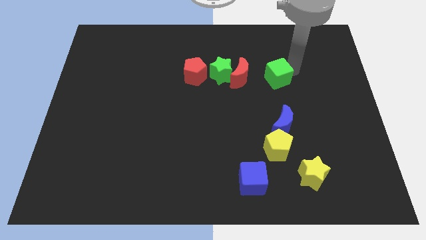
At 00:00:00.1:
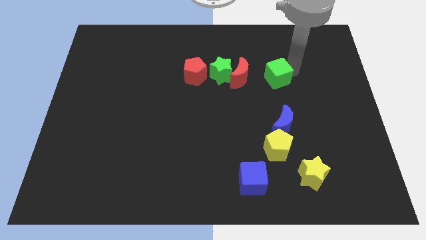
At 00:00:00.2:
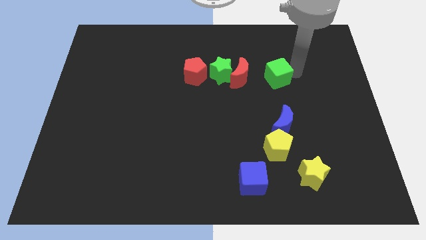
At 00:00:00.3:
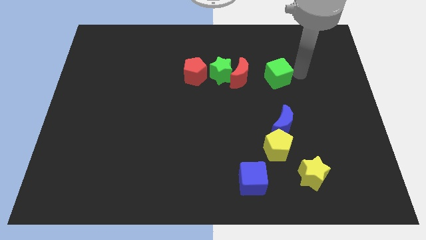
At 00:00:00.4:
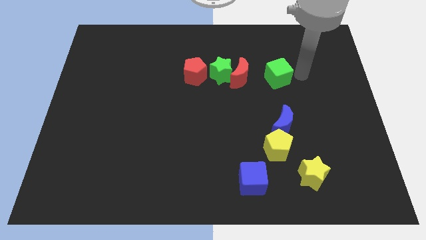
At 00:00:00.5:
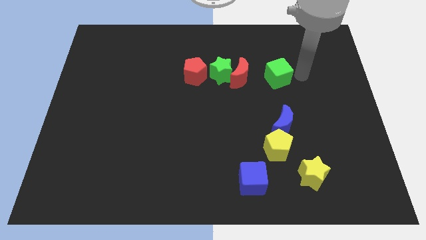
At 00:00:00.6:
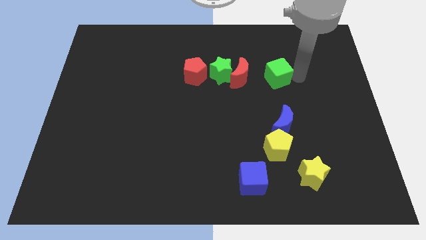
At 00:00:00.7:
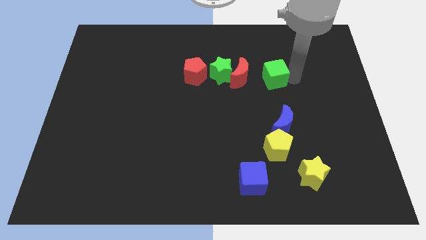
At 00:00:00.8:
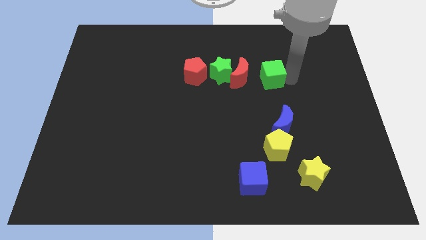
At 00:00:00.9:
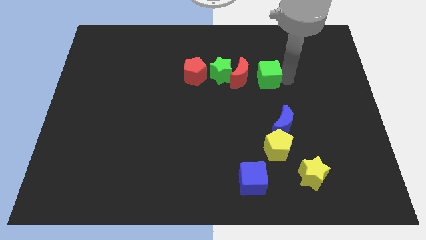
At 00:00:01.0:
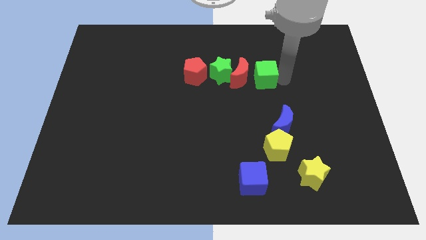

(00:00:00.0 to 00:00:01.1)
push the green cube to the right side of the red crescent

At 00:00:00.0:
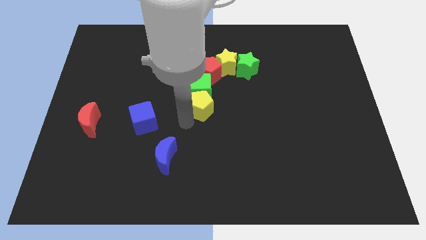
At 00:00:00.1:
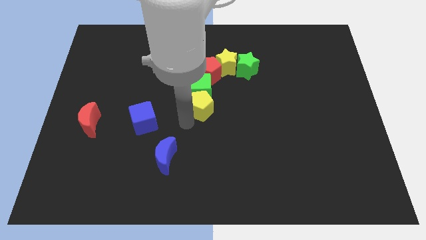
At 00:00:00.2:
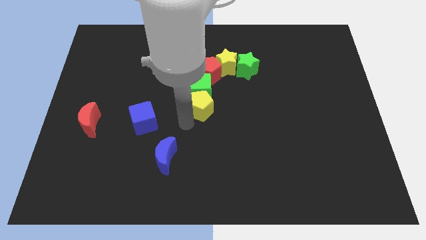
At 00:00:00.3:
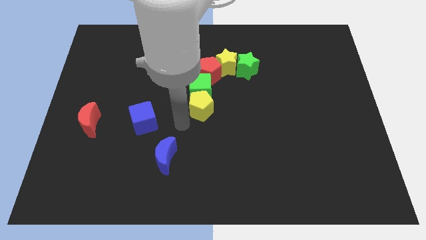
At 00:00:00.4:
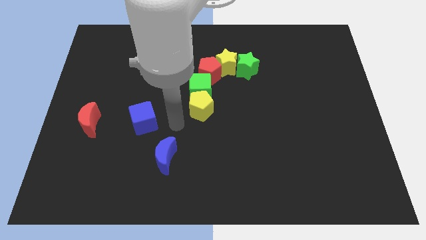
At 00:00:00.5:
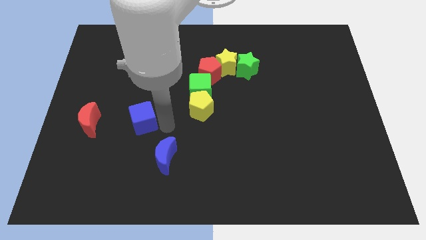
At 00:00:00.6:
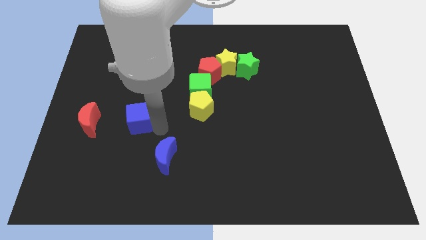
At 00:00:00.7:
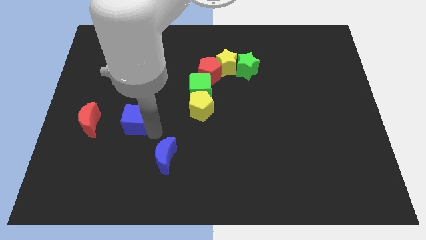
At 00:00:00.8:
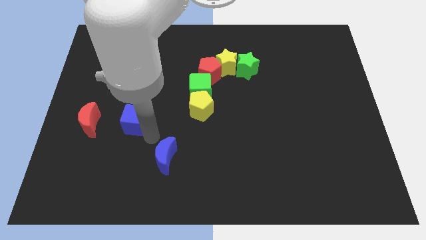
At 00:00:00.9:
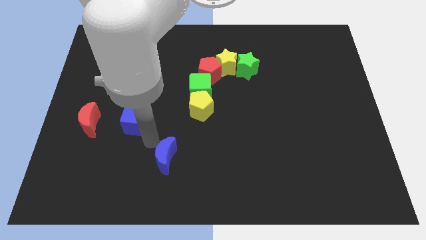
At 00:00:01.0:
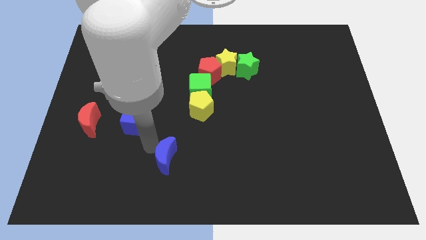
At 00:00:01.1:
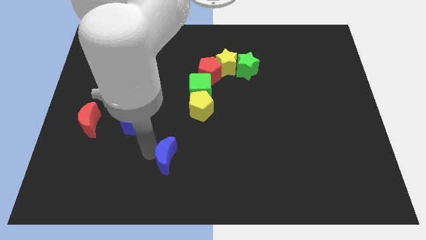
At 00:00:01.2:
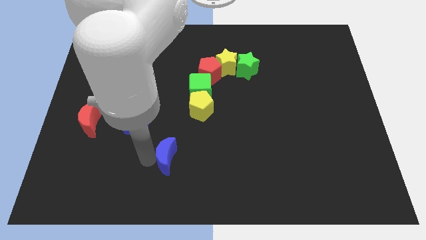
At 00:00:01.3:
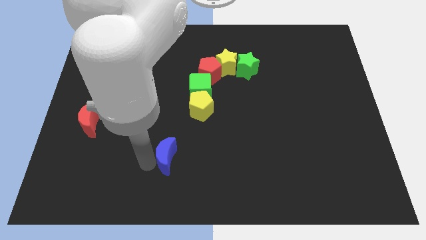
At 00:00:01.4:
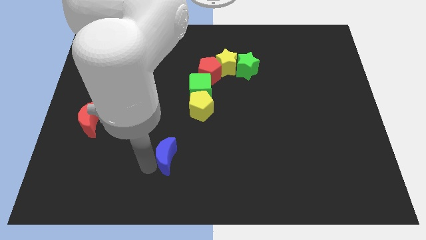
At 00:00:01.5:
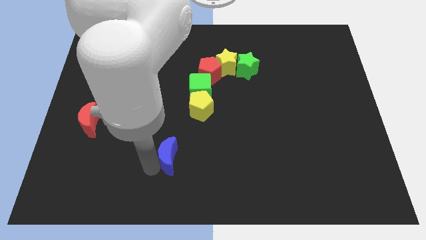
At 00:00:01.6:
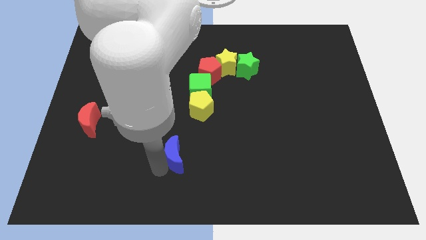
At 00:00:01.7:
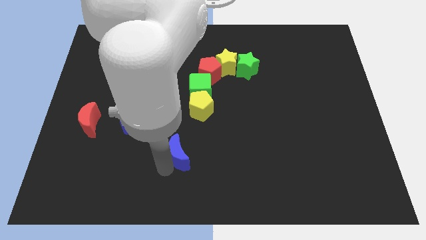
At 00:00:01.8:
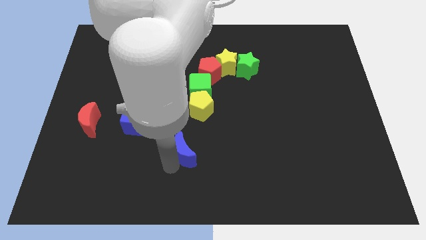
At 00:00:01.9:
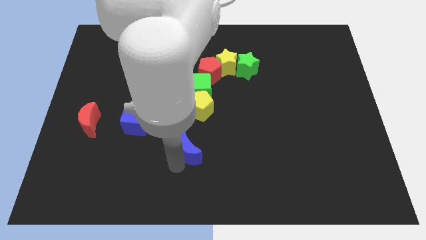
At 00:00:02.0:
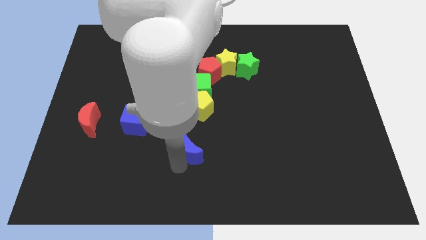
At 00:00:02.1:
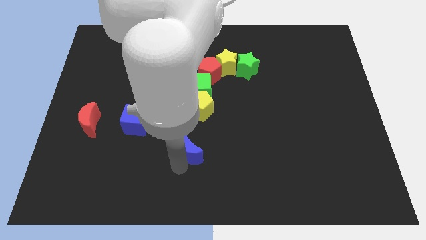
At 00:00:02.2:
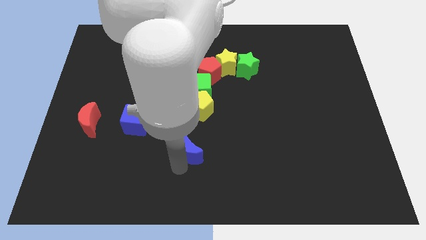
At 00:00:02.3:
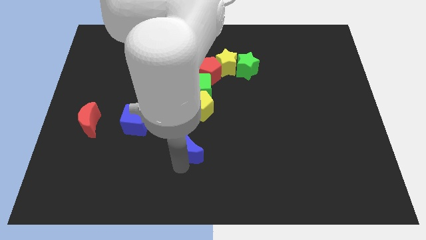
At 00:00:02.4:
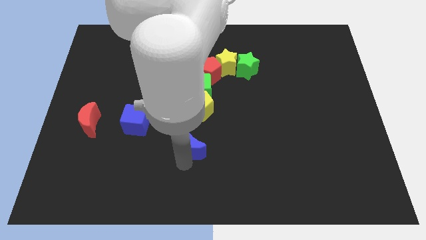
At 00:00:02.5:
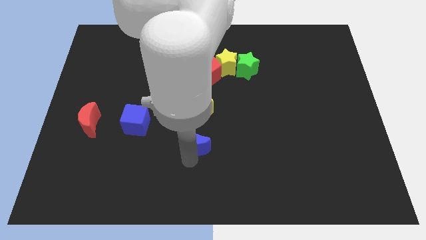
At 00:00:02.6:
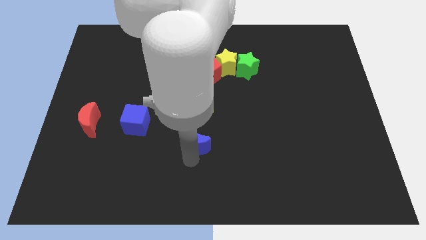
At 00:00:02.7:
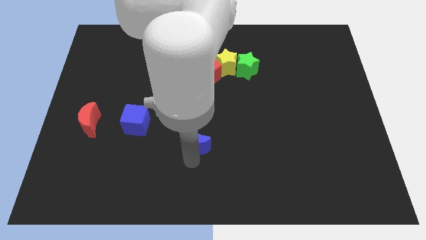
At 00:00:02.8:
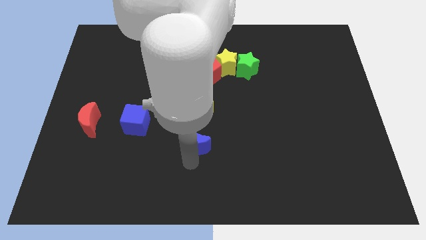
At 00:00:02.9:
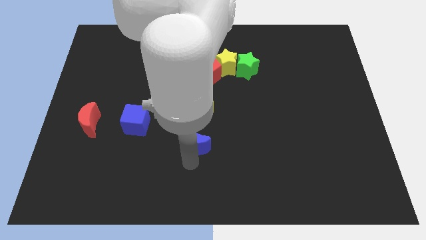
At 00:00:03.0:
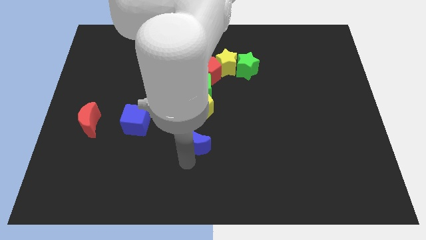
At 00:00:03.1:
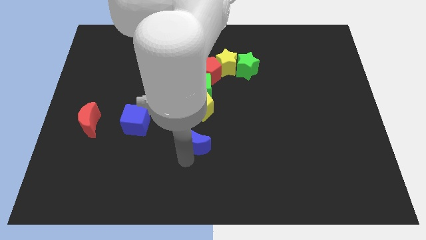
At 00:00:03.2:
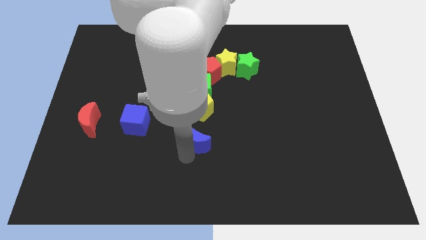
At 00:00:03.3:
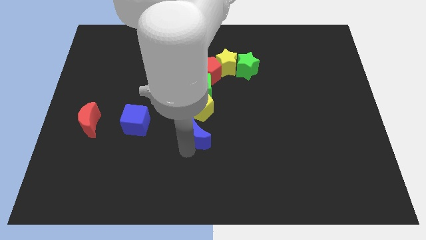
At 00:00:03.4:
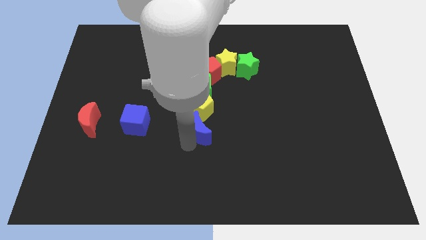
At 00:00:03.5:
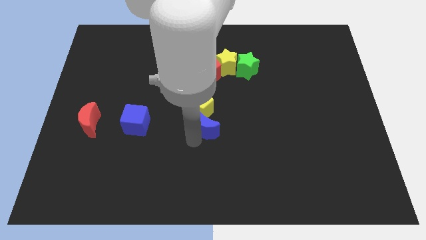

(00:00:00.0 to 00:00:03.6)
place the blue moon towards the yellow pentagon

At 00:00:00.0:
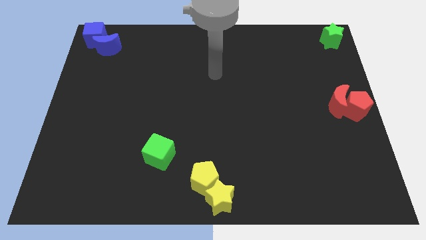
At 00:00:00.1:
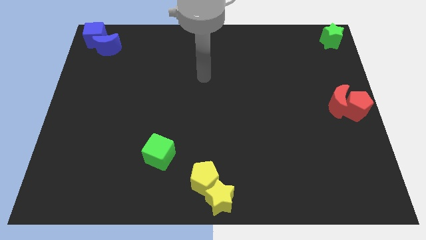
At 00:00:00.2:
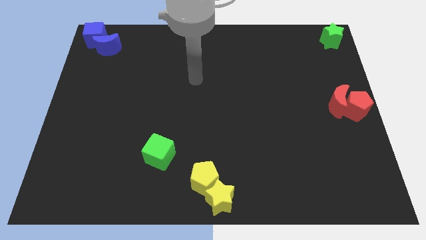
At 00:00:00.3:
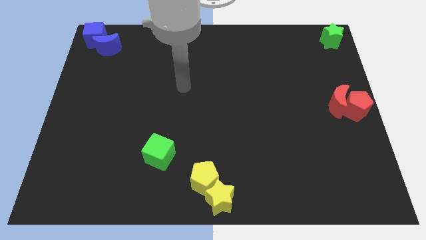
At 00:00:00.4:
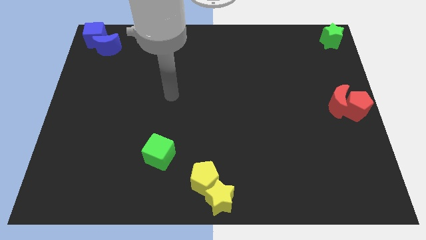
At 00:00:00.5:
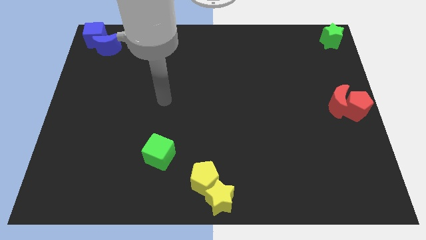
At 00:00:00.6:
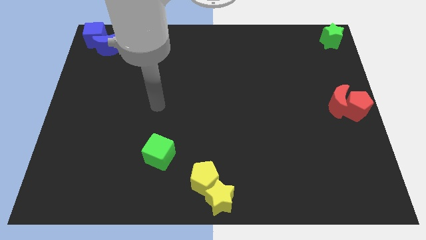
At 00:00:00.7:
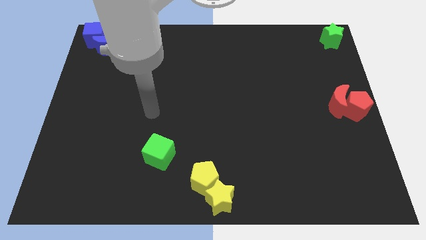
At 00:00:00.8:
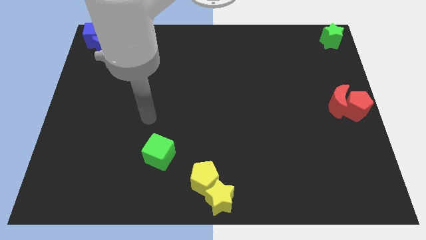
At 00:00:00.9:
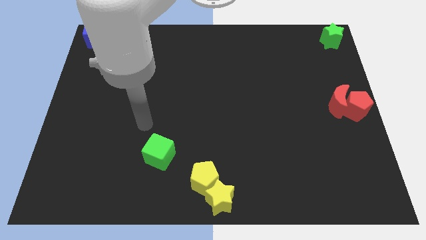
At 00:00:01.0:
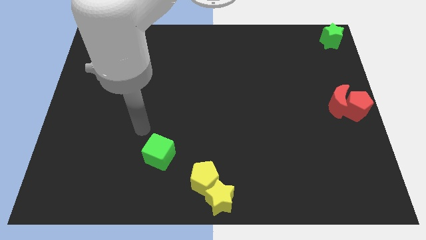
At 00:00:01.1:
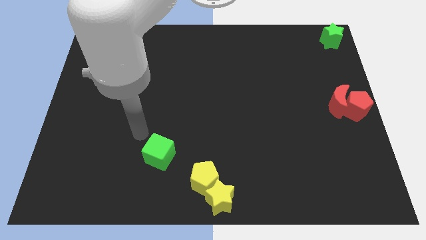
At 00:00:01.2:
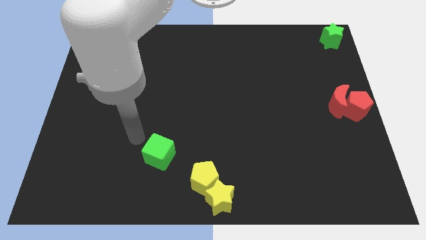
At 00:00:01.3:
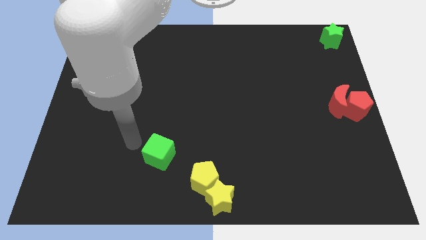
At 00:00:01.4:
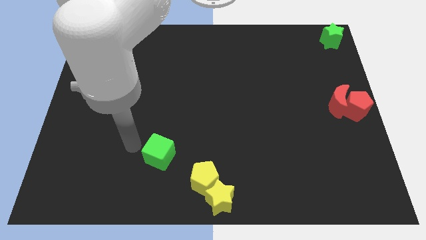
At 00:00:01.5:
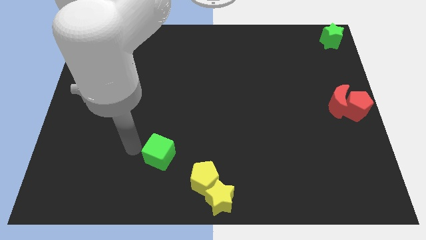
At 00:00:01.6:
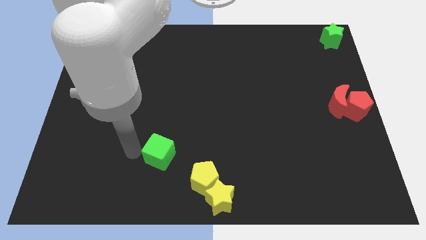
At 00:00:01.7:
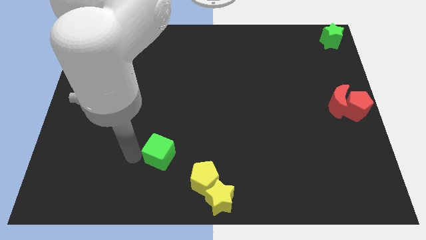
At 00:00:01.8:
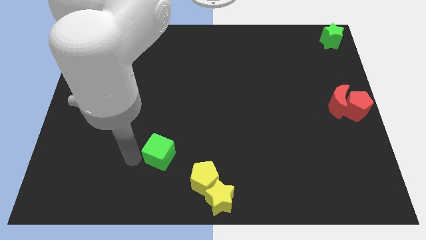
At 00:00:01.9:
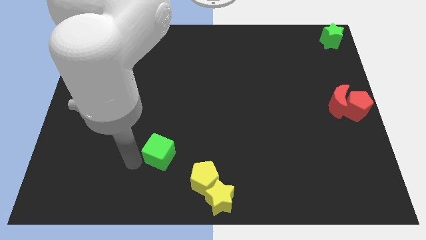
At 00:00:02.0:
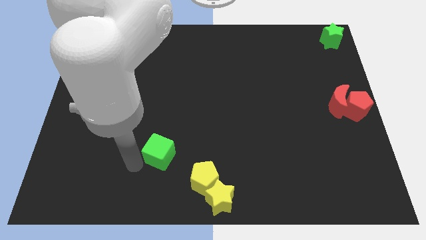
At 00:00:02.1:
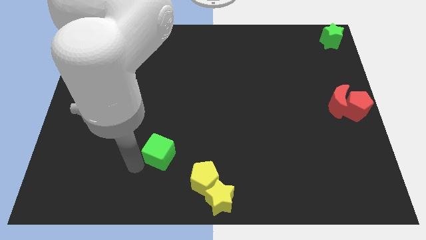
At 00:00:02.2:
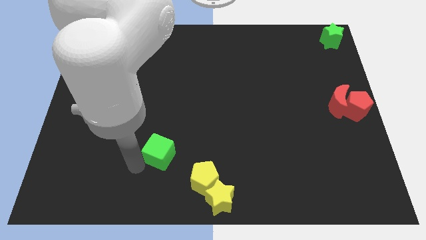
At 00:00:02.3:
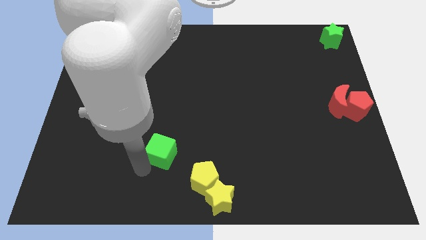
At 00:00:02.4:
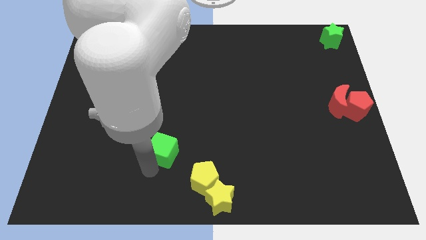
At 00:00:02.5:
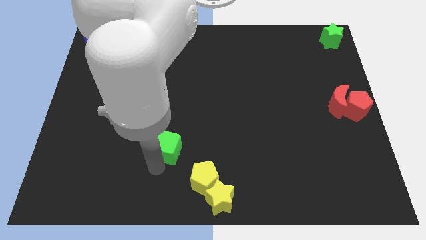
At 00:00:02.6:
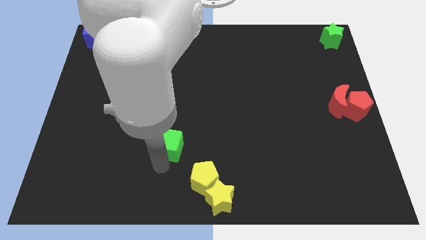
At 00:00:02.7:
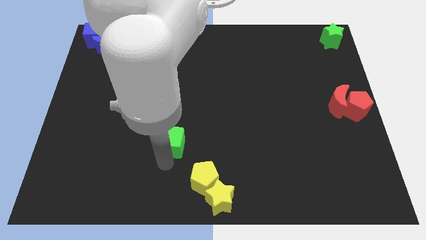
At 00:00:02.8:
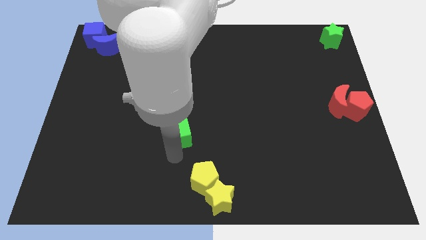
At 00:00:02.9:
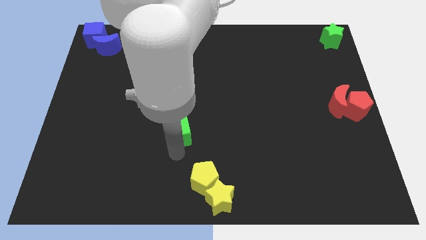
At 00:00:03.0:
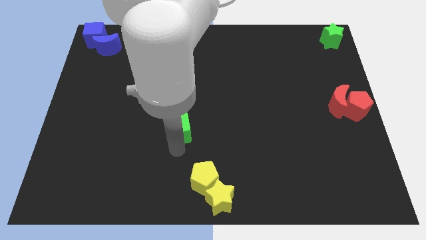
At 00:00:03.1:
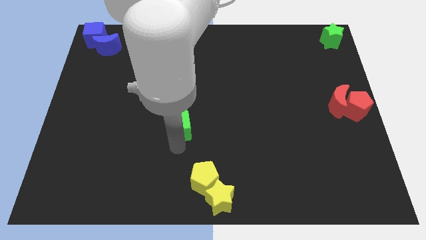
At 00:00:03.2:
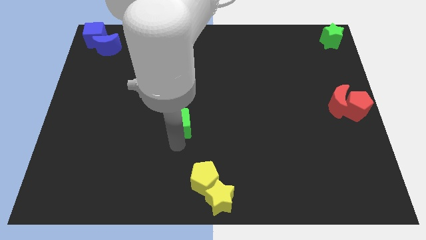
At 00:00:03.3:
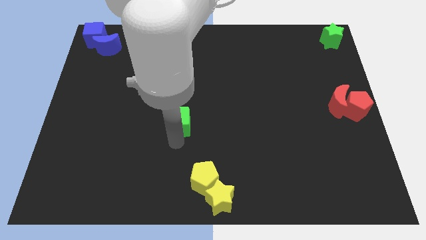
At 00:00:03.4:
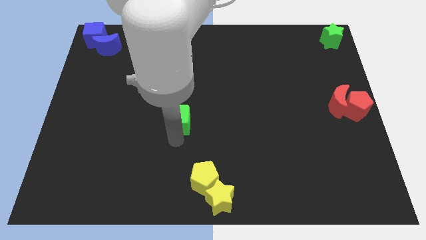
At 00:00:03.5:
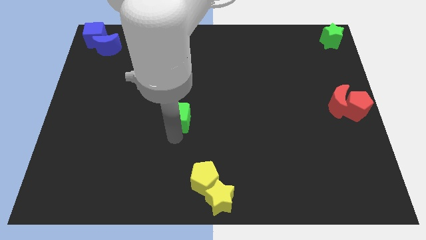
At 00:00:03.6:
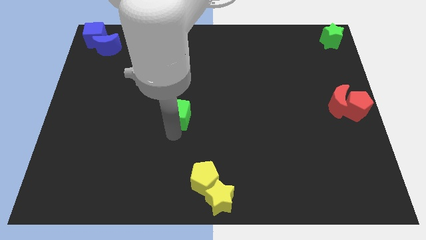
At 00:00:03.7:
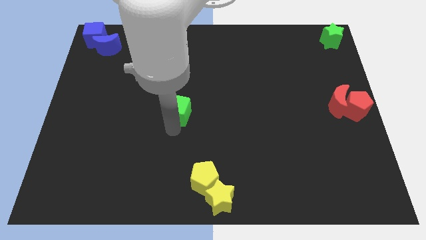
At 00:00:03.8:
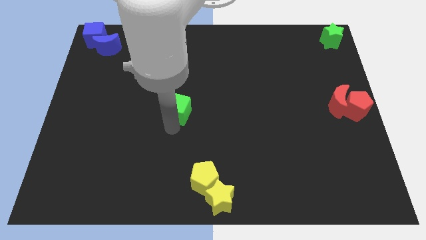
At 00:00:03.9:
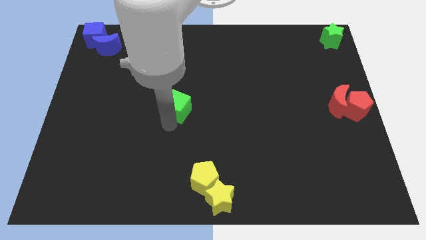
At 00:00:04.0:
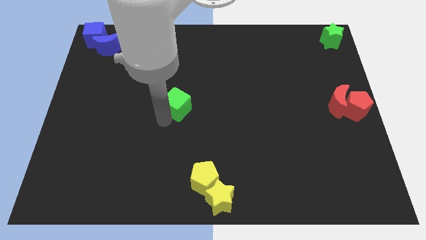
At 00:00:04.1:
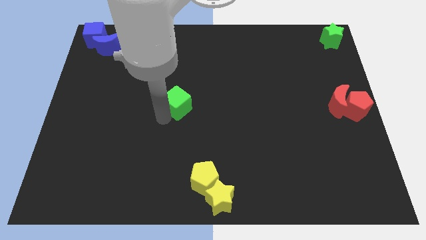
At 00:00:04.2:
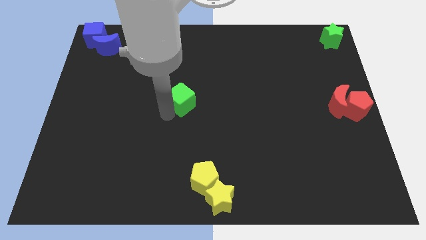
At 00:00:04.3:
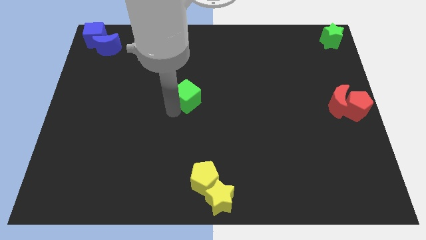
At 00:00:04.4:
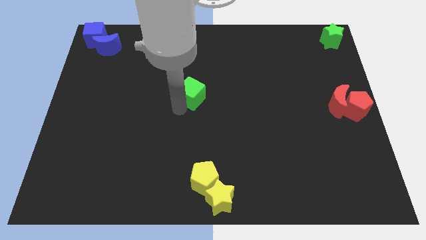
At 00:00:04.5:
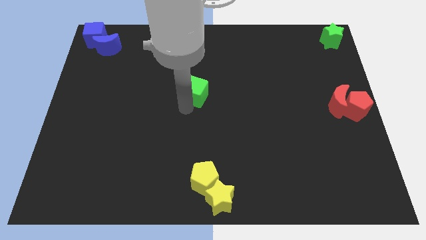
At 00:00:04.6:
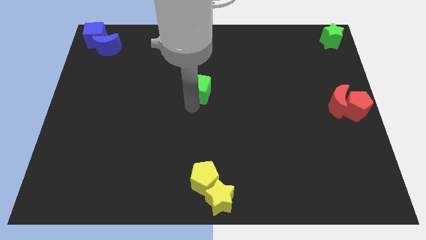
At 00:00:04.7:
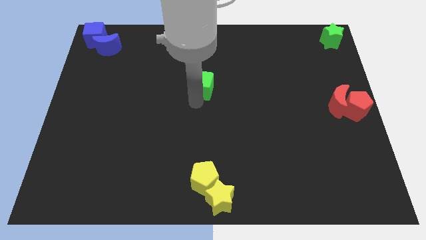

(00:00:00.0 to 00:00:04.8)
move the green cube vertical to the yellow pentagon
